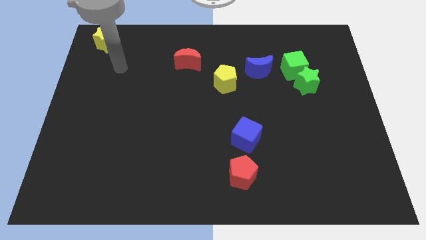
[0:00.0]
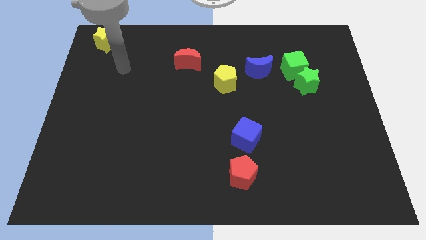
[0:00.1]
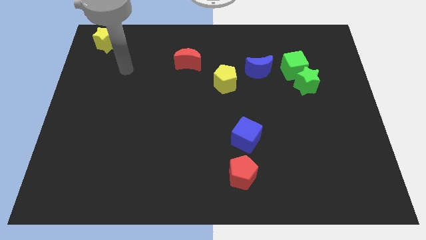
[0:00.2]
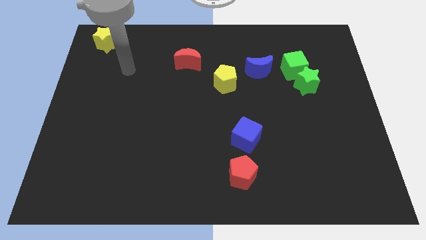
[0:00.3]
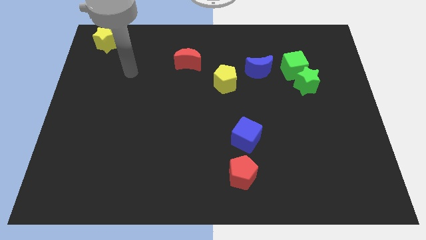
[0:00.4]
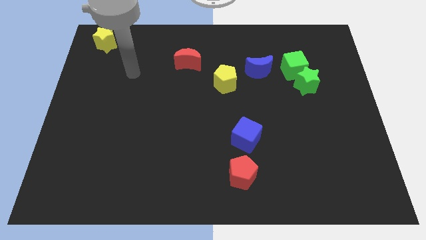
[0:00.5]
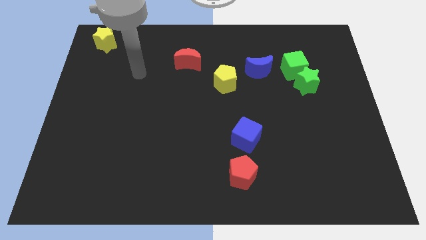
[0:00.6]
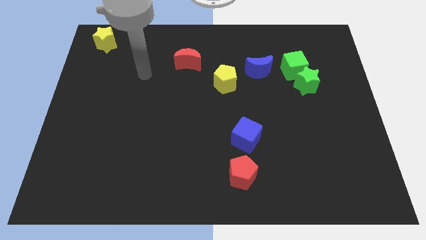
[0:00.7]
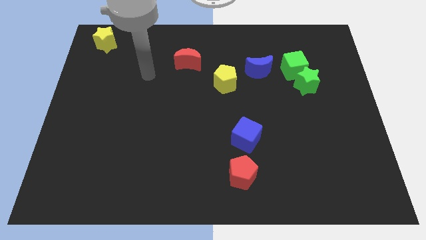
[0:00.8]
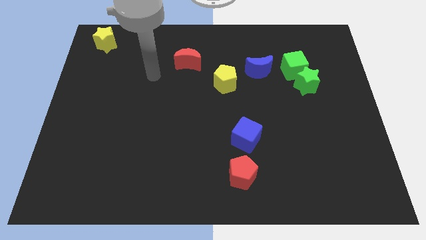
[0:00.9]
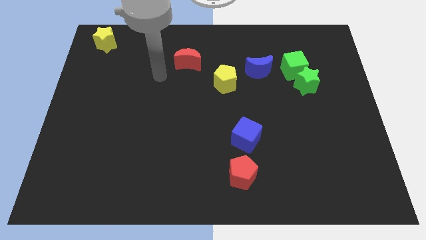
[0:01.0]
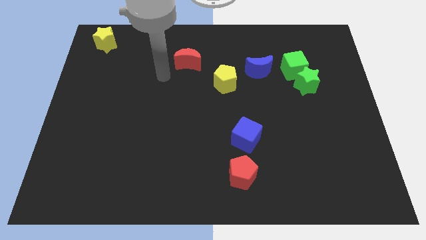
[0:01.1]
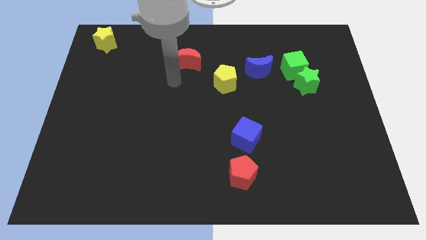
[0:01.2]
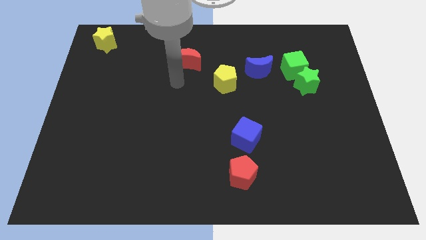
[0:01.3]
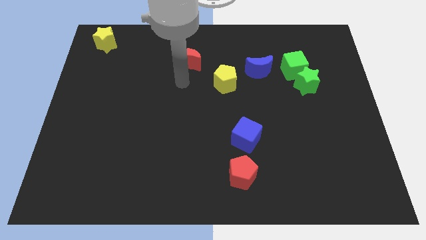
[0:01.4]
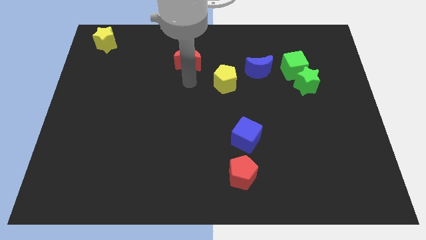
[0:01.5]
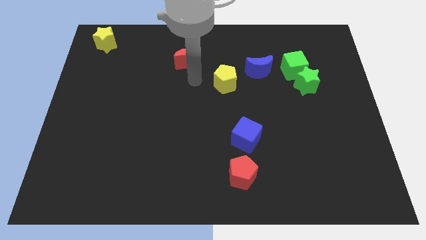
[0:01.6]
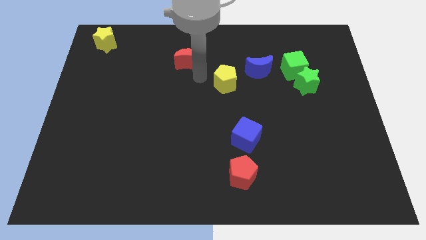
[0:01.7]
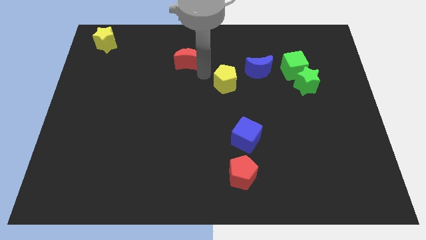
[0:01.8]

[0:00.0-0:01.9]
drag your arm in between of red moon yellow pentagon

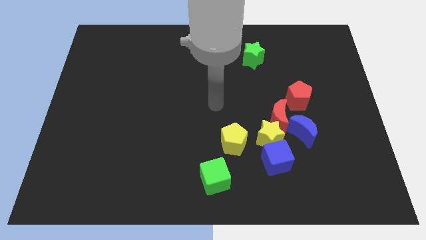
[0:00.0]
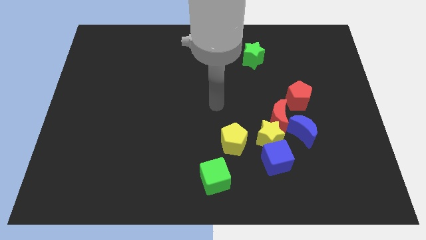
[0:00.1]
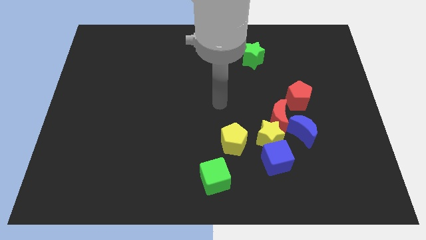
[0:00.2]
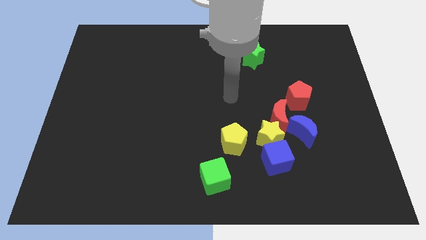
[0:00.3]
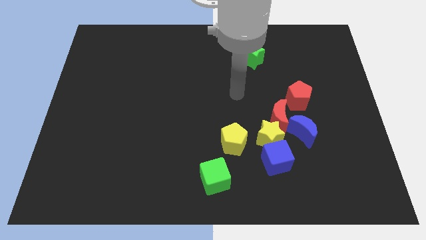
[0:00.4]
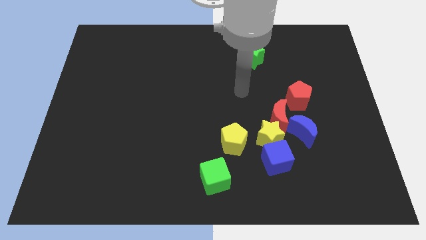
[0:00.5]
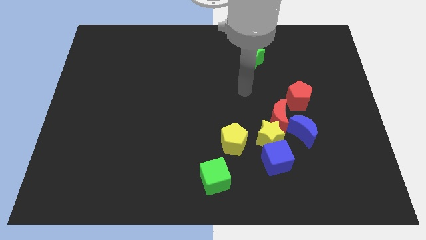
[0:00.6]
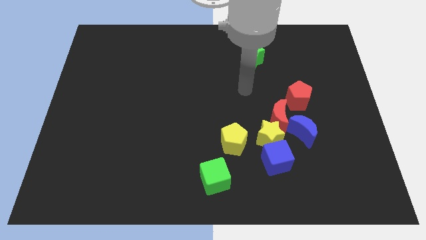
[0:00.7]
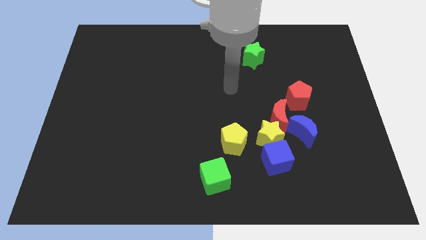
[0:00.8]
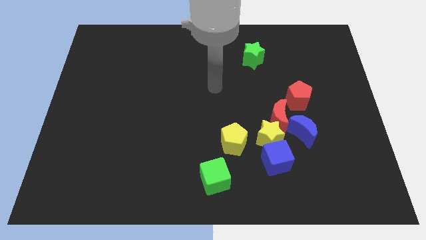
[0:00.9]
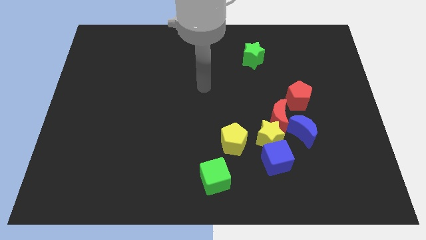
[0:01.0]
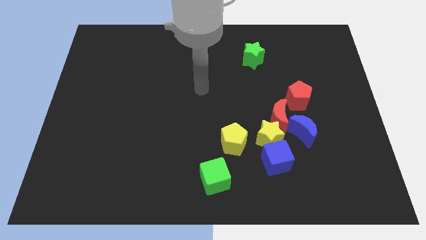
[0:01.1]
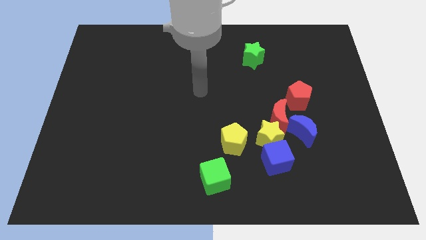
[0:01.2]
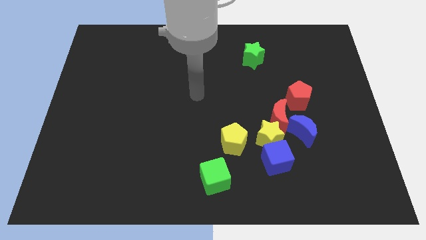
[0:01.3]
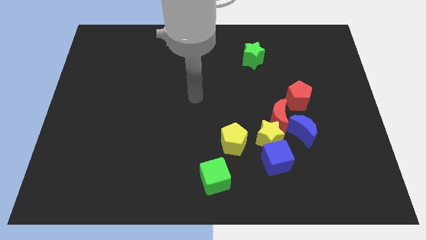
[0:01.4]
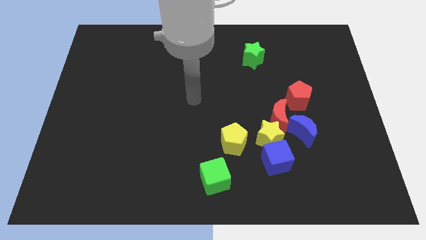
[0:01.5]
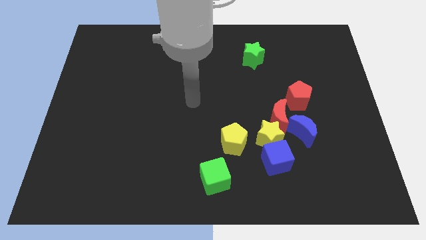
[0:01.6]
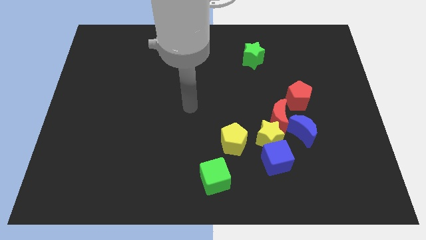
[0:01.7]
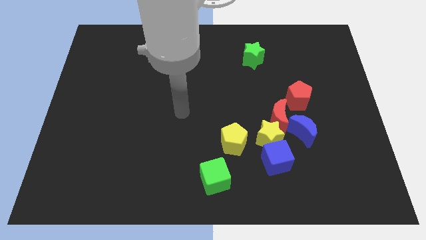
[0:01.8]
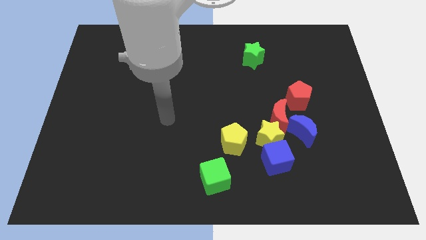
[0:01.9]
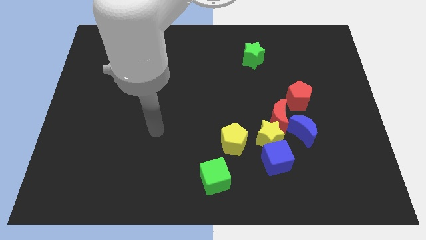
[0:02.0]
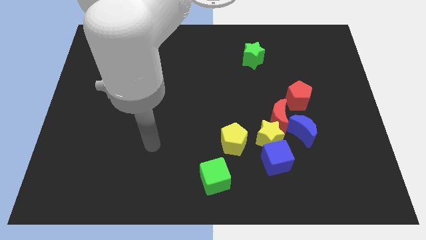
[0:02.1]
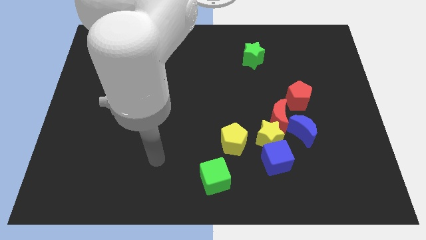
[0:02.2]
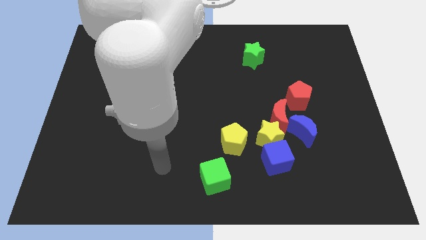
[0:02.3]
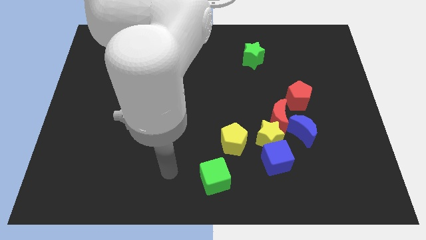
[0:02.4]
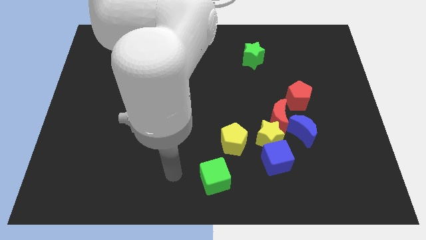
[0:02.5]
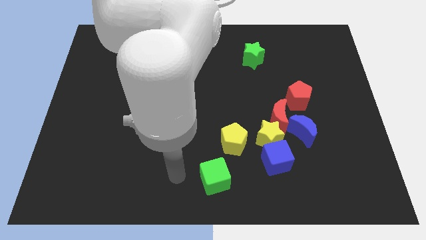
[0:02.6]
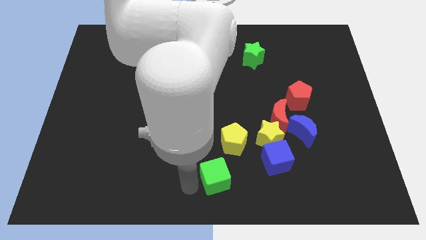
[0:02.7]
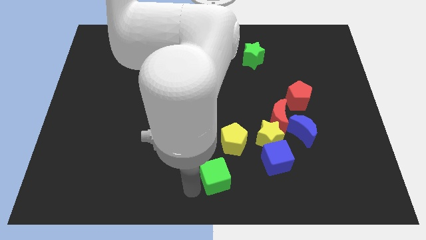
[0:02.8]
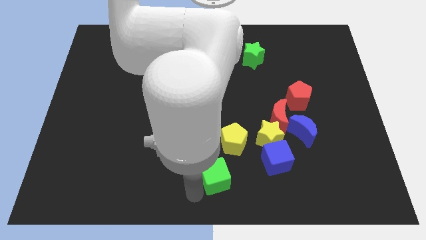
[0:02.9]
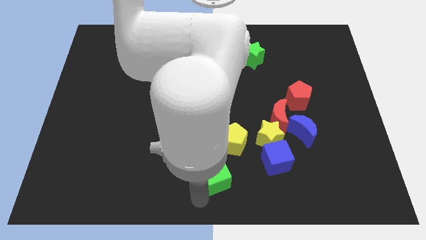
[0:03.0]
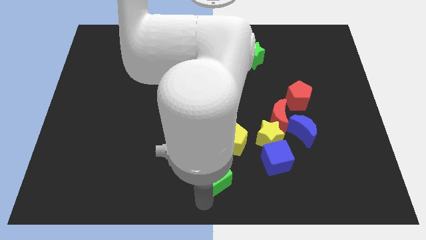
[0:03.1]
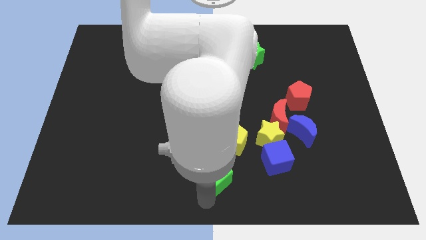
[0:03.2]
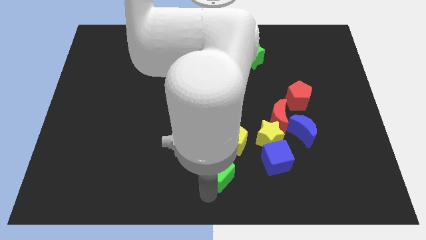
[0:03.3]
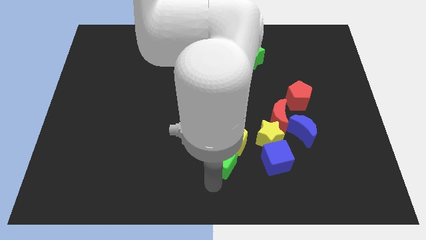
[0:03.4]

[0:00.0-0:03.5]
push the green cube towards the yellow pentagon

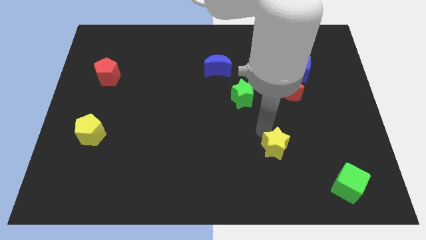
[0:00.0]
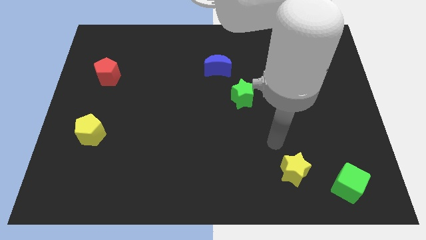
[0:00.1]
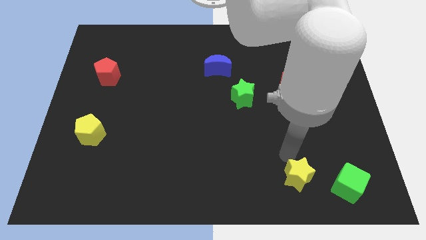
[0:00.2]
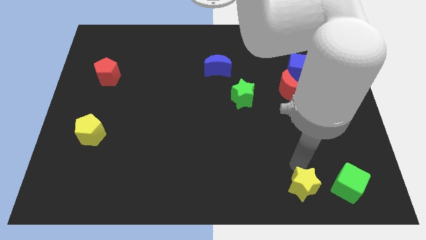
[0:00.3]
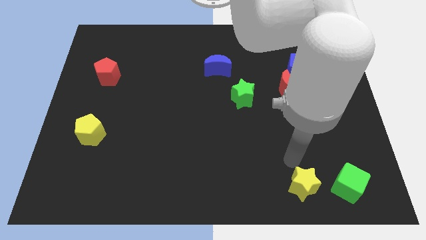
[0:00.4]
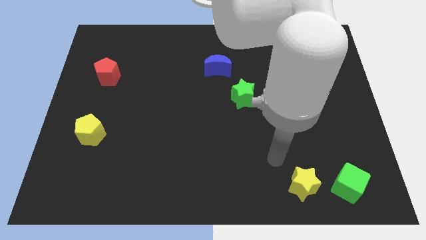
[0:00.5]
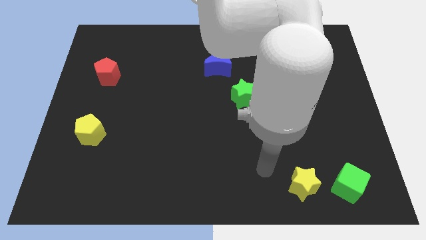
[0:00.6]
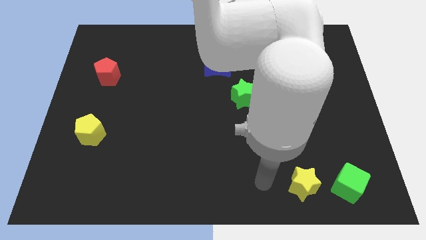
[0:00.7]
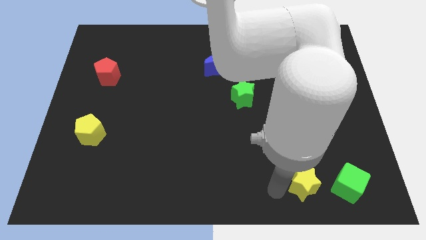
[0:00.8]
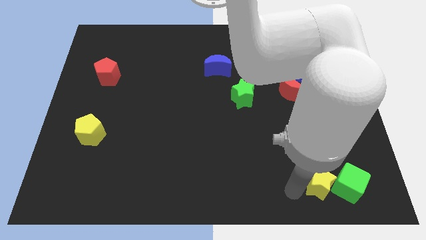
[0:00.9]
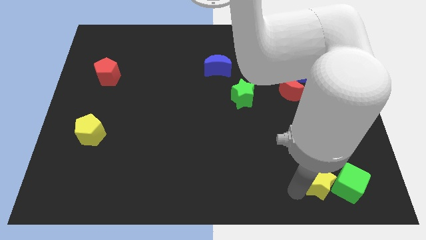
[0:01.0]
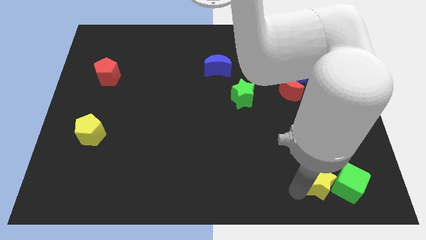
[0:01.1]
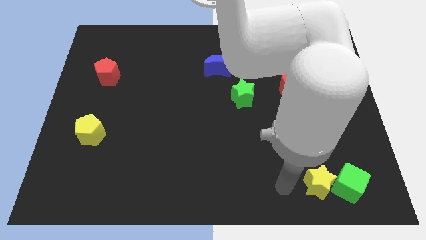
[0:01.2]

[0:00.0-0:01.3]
place the yellow star left to the green cube

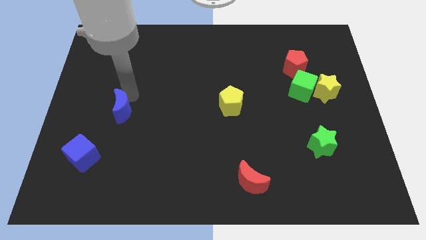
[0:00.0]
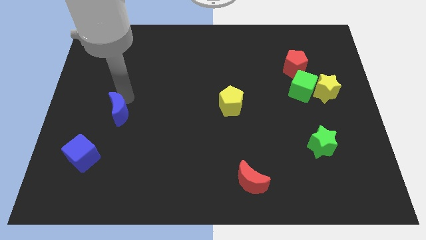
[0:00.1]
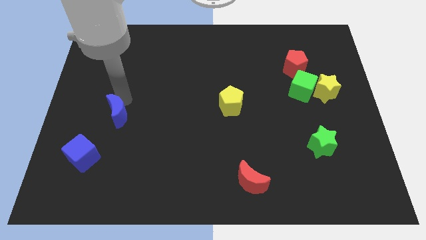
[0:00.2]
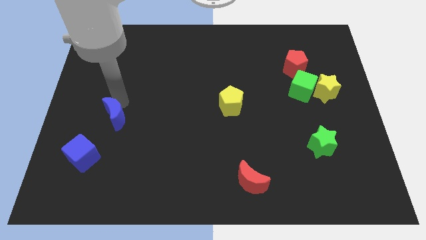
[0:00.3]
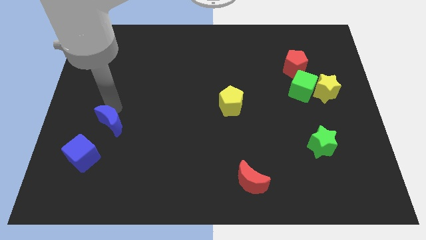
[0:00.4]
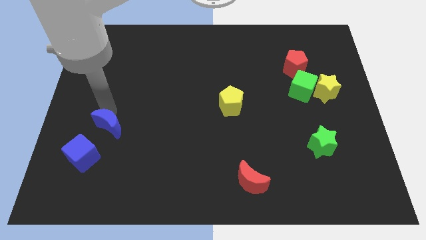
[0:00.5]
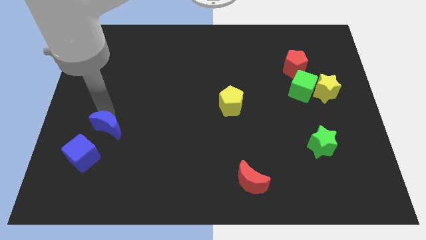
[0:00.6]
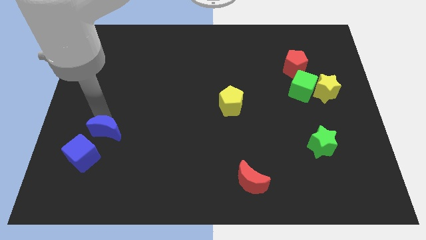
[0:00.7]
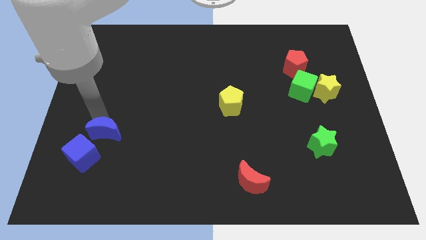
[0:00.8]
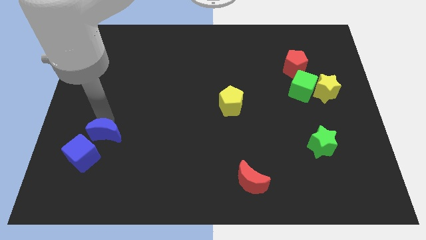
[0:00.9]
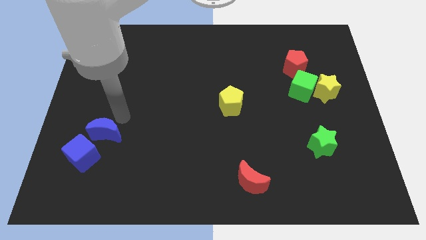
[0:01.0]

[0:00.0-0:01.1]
push blue moon into blue cube

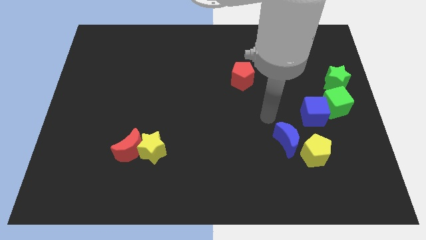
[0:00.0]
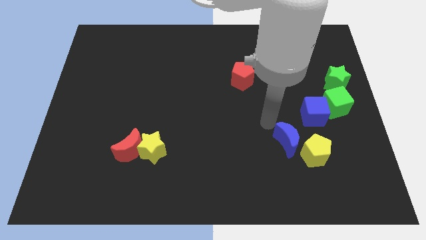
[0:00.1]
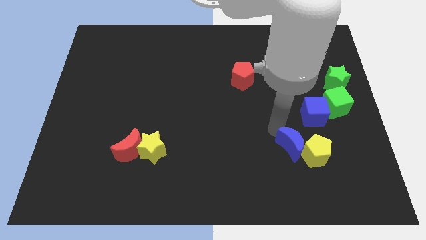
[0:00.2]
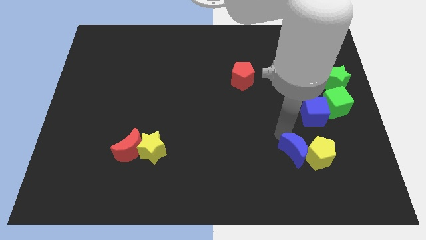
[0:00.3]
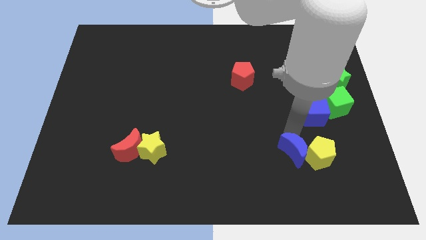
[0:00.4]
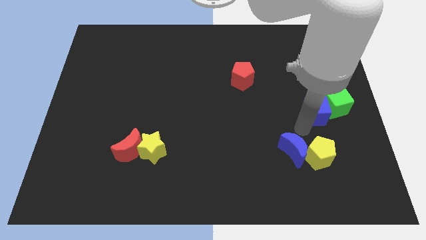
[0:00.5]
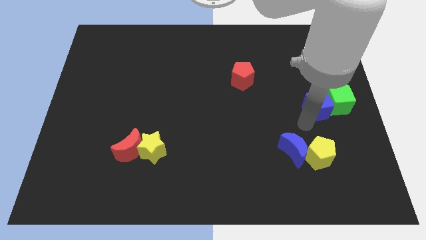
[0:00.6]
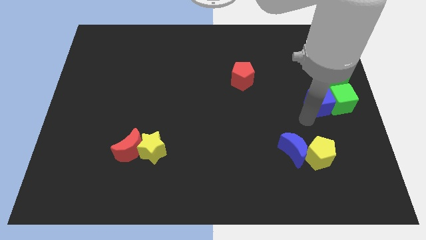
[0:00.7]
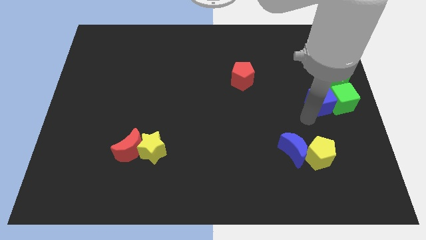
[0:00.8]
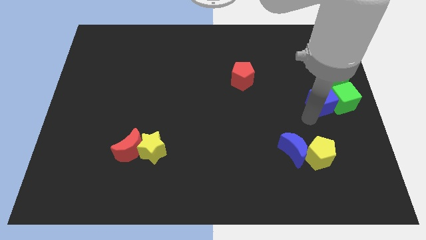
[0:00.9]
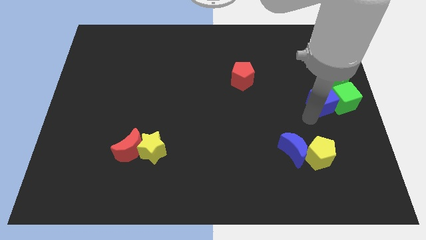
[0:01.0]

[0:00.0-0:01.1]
move blue cube into green cube

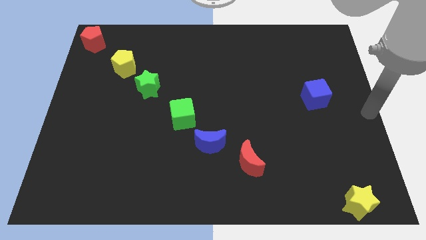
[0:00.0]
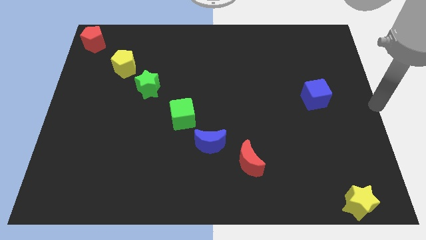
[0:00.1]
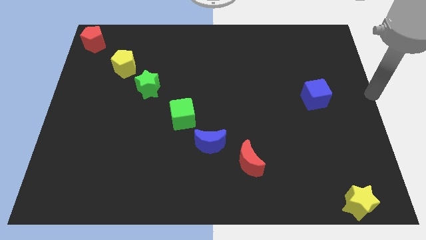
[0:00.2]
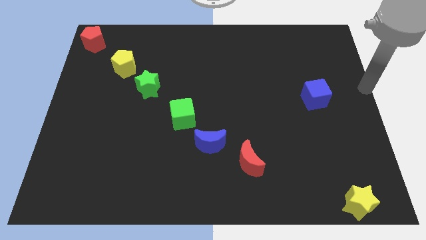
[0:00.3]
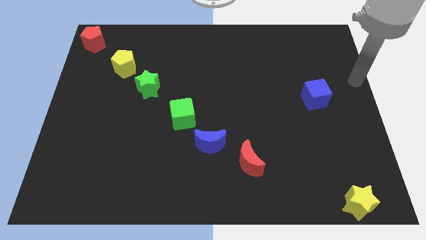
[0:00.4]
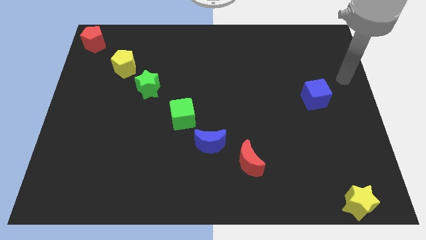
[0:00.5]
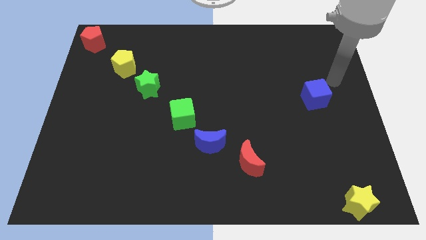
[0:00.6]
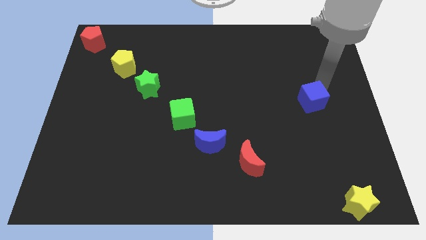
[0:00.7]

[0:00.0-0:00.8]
place the arm diagonal to the blue cube
